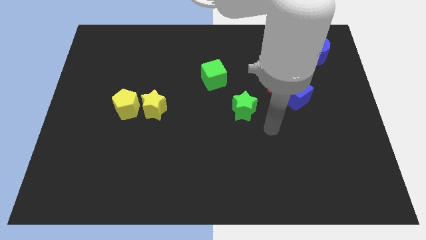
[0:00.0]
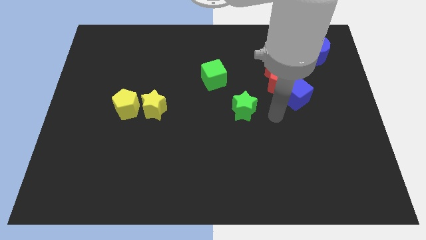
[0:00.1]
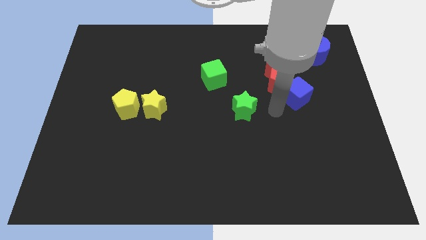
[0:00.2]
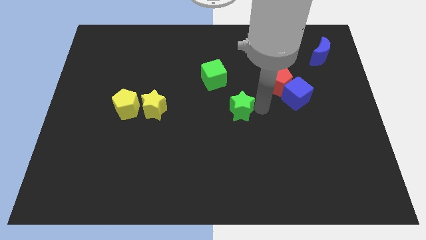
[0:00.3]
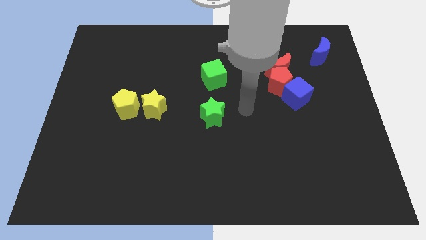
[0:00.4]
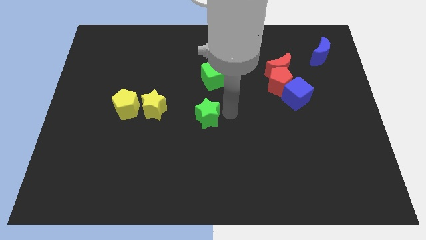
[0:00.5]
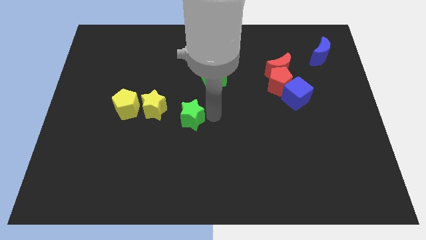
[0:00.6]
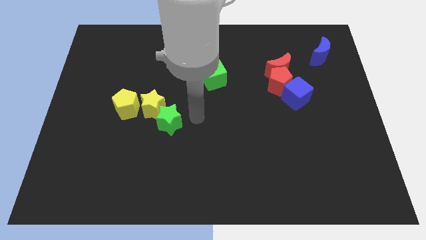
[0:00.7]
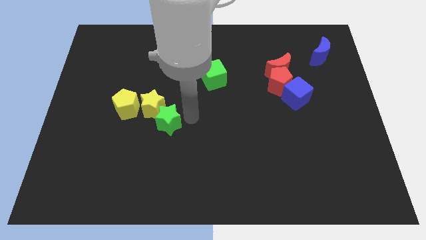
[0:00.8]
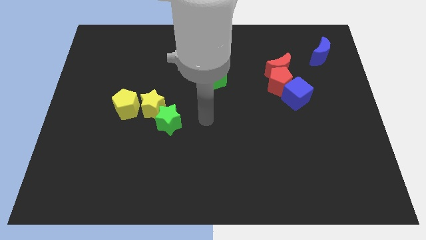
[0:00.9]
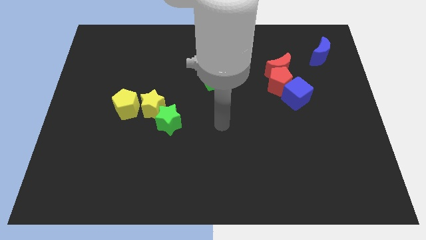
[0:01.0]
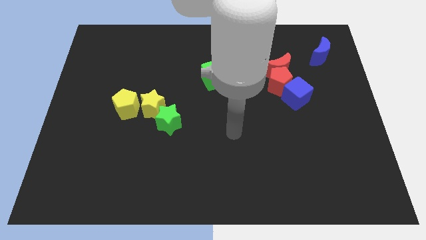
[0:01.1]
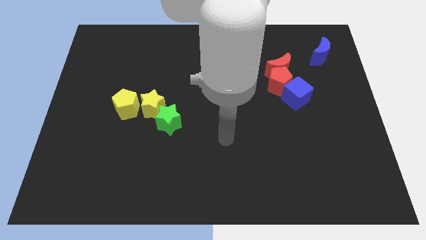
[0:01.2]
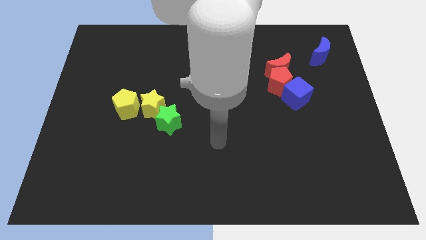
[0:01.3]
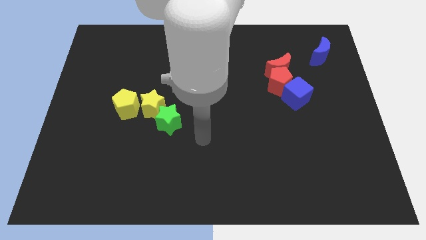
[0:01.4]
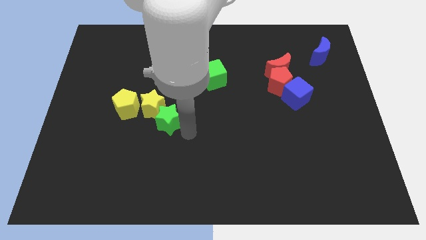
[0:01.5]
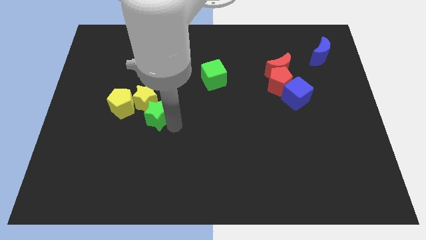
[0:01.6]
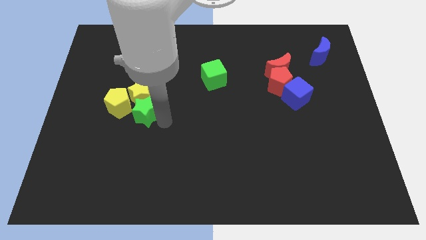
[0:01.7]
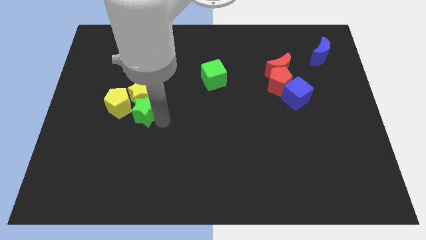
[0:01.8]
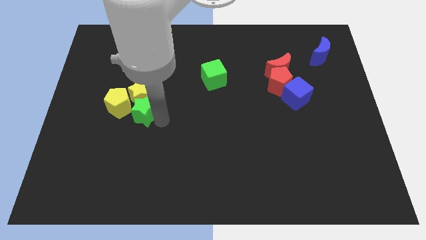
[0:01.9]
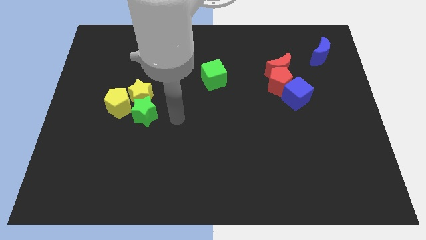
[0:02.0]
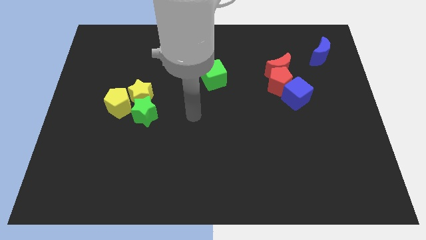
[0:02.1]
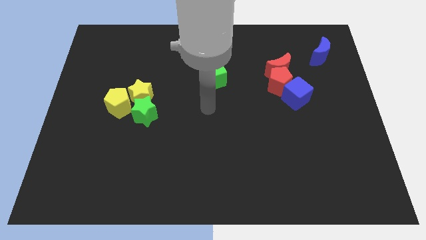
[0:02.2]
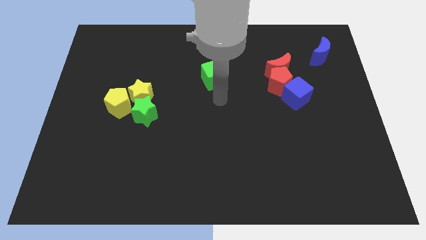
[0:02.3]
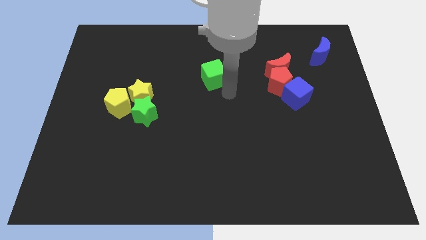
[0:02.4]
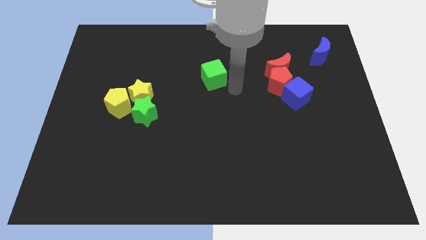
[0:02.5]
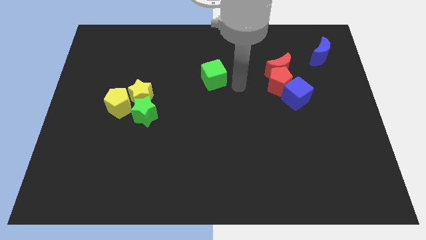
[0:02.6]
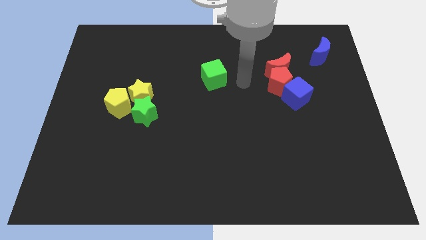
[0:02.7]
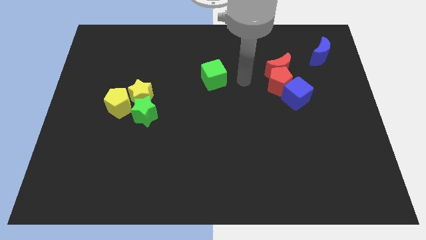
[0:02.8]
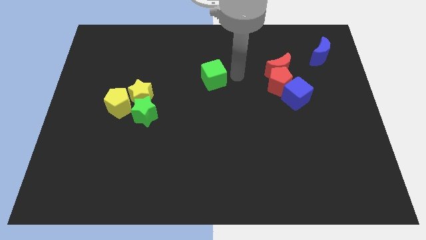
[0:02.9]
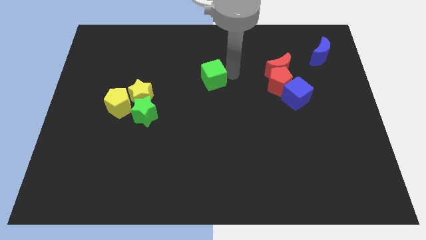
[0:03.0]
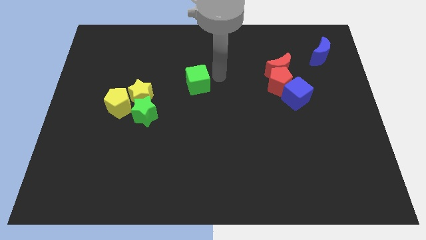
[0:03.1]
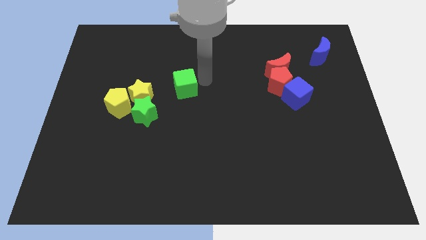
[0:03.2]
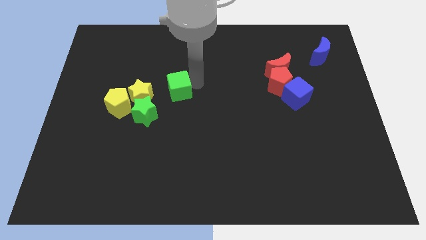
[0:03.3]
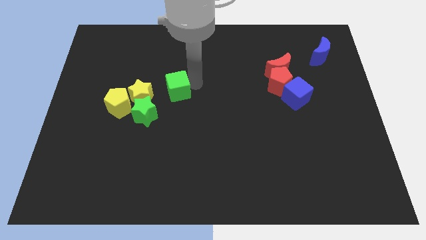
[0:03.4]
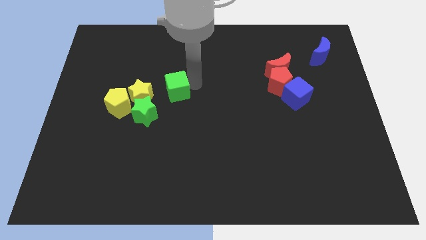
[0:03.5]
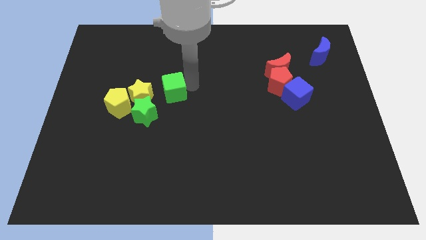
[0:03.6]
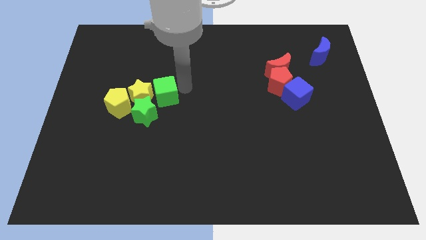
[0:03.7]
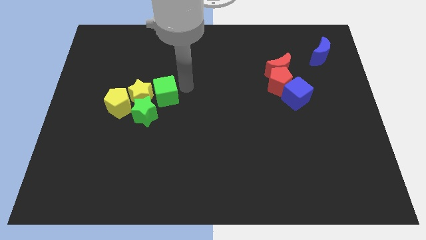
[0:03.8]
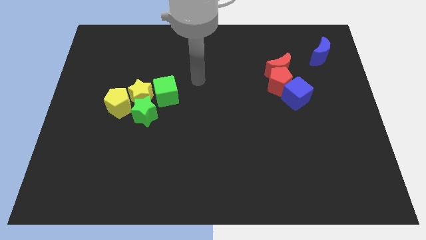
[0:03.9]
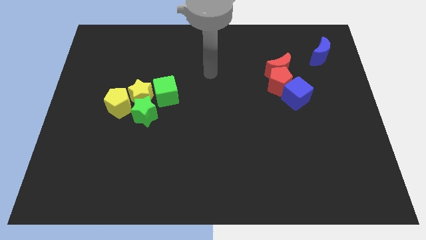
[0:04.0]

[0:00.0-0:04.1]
move both the green blocks into the yellow blocks to form a group of blocks

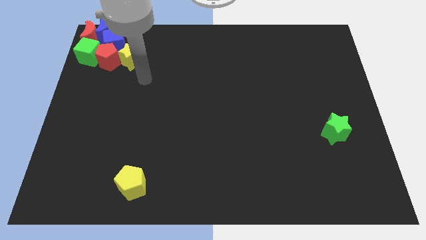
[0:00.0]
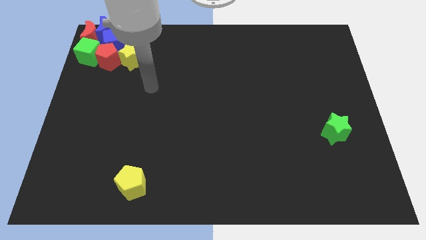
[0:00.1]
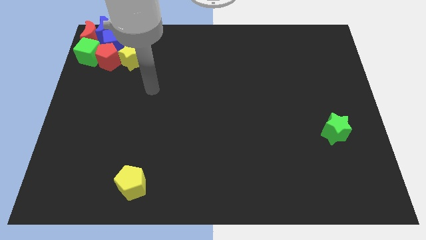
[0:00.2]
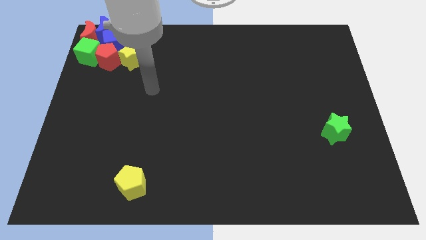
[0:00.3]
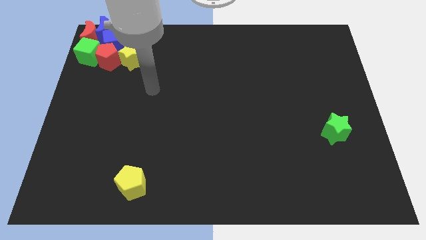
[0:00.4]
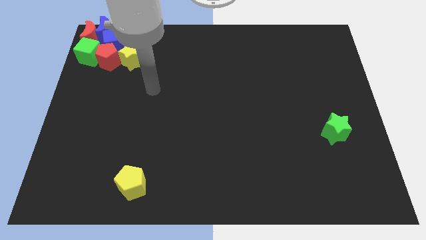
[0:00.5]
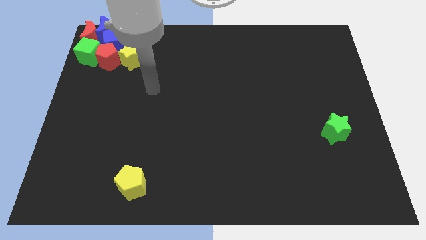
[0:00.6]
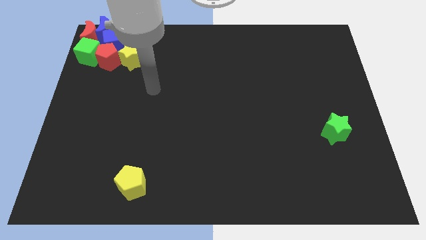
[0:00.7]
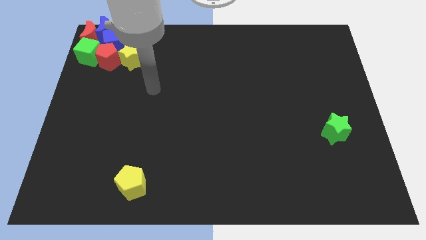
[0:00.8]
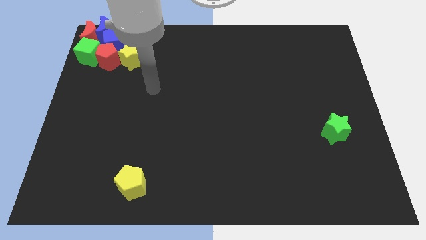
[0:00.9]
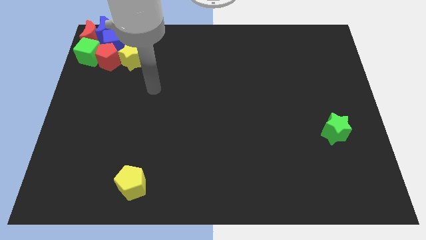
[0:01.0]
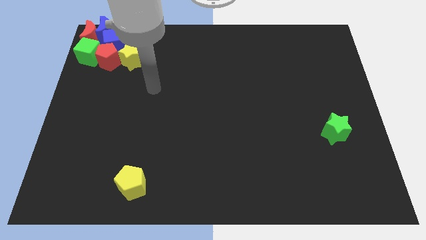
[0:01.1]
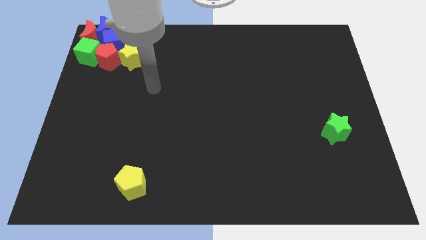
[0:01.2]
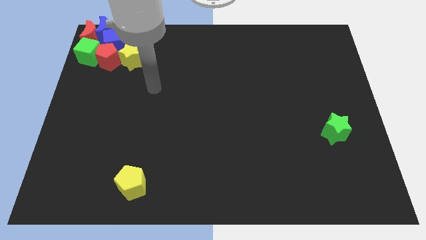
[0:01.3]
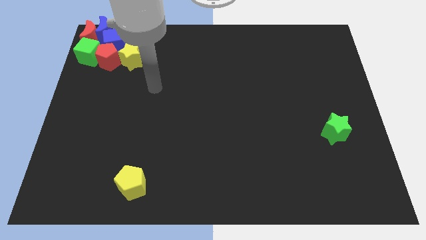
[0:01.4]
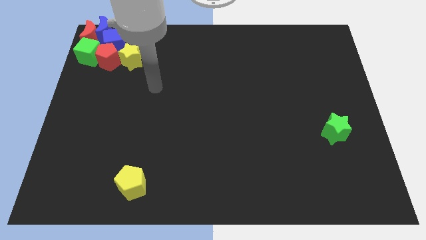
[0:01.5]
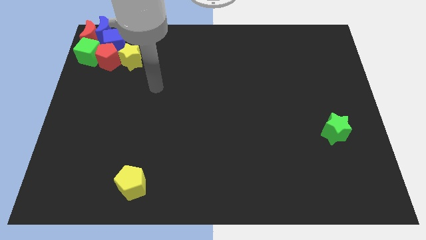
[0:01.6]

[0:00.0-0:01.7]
move your arm away from the yellow star

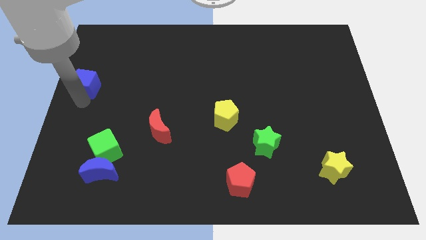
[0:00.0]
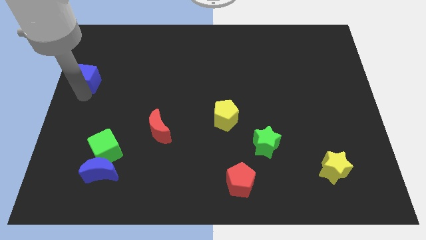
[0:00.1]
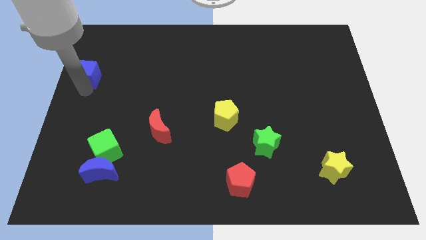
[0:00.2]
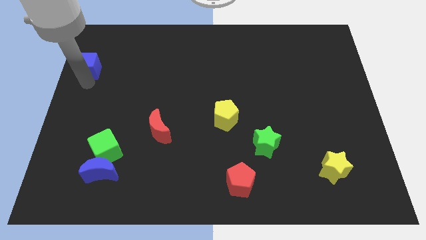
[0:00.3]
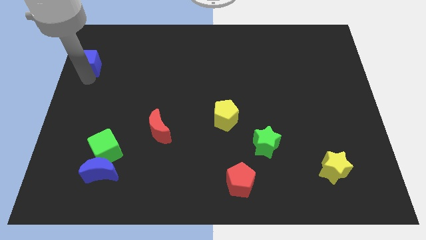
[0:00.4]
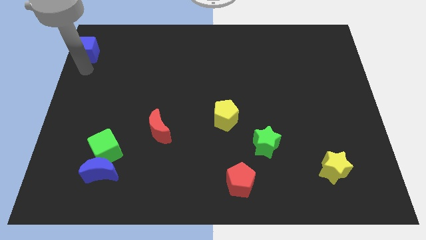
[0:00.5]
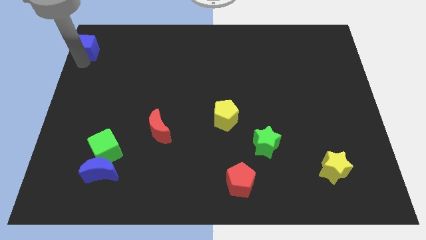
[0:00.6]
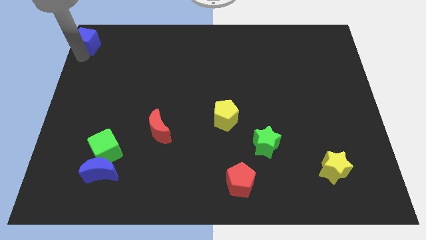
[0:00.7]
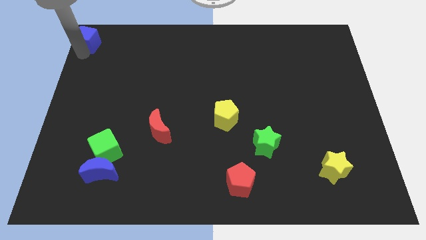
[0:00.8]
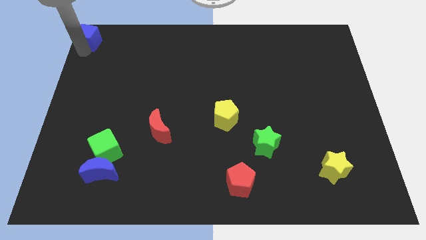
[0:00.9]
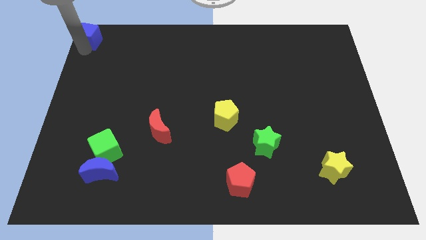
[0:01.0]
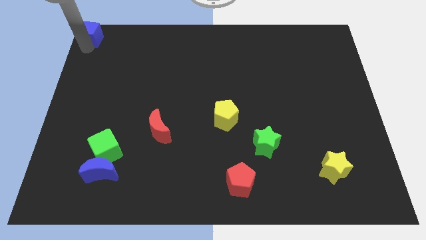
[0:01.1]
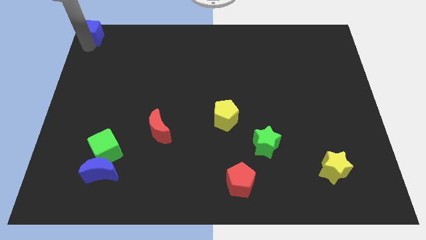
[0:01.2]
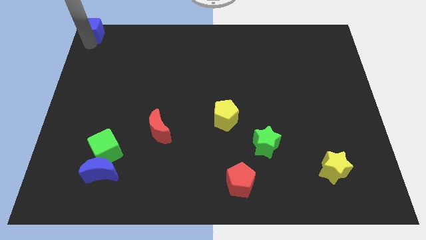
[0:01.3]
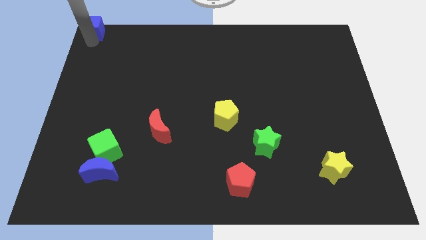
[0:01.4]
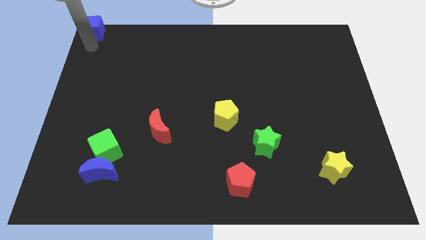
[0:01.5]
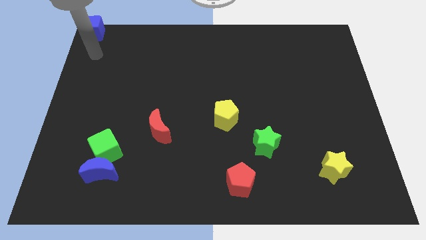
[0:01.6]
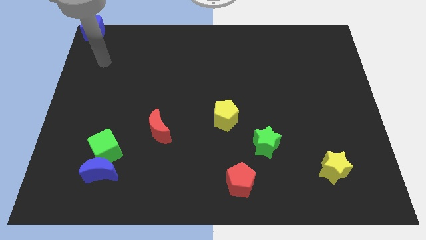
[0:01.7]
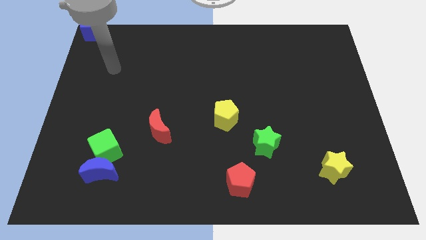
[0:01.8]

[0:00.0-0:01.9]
place the blue cube at the top left corner of the board

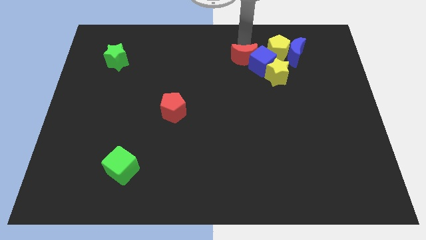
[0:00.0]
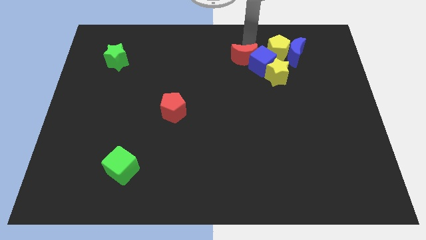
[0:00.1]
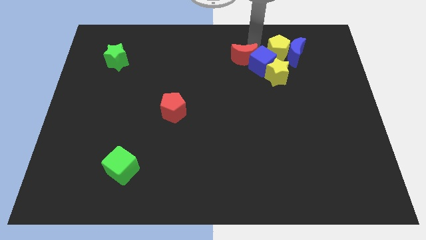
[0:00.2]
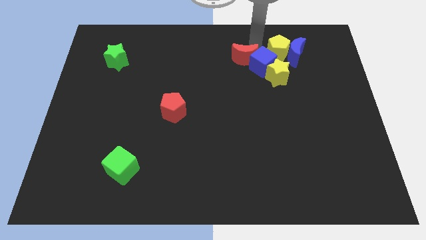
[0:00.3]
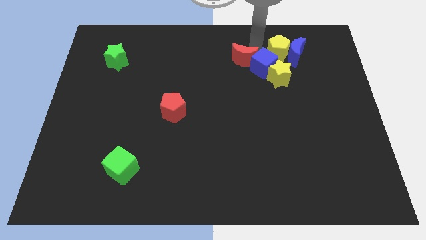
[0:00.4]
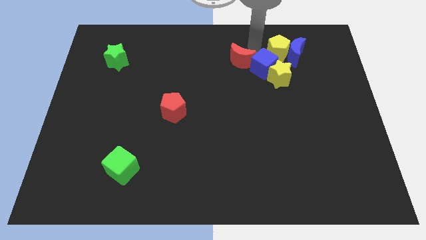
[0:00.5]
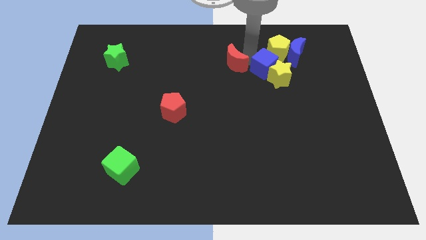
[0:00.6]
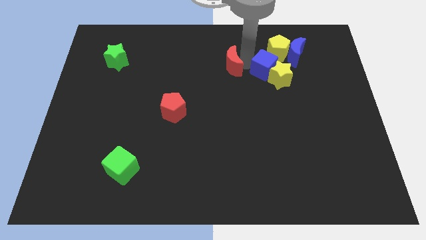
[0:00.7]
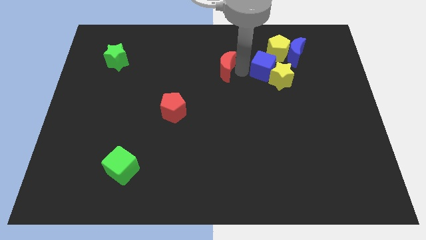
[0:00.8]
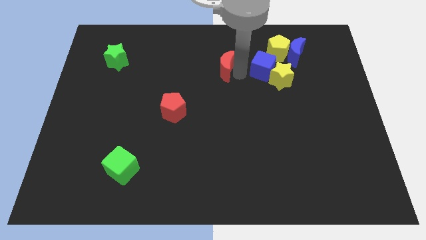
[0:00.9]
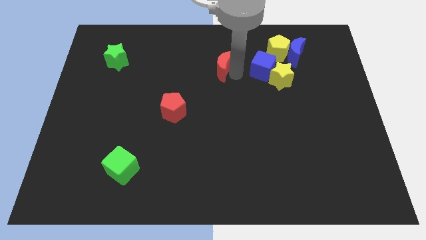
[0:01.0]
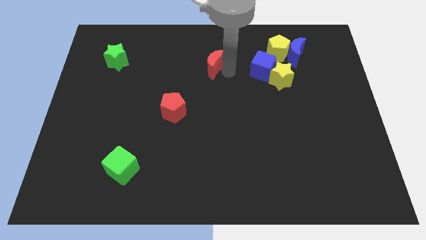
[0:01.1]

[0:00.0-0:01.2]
separate the red crescent from the blue cube
